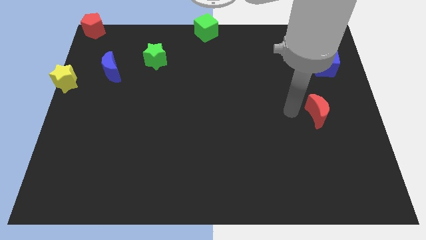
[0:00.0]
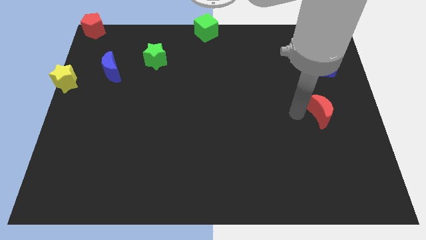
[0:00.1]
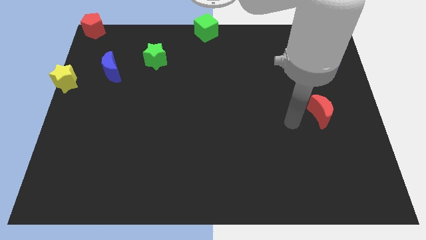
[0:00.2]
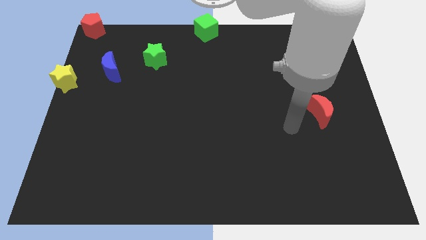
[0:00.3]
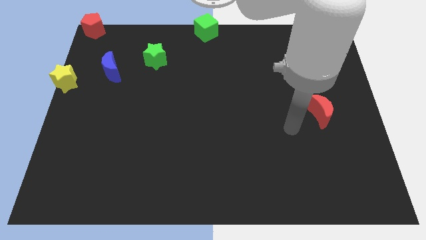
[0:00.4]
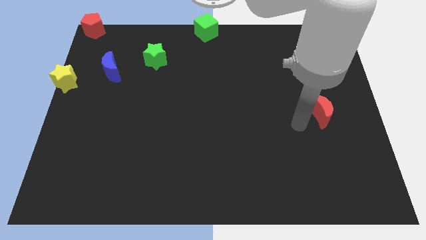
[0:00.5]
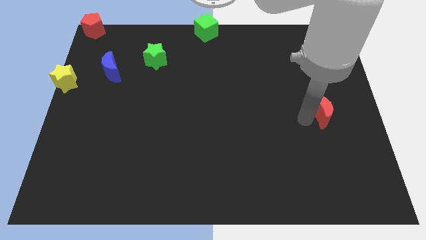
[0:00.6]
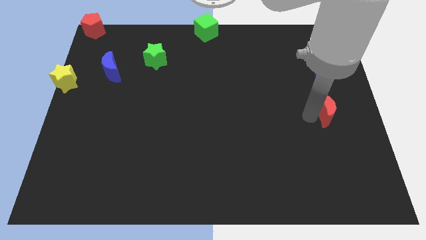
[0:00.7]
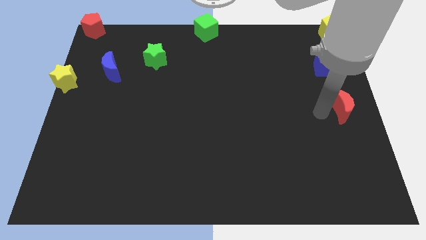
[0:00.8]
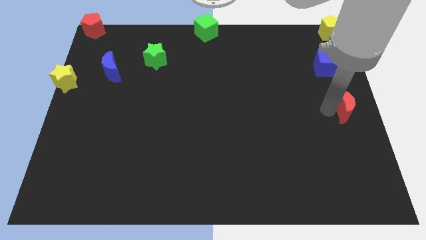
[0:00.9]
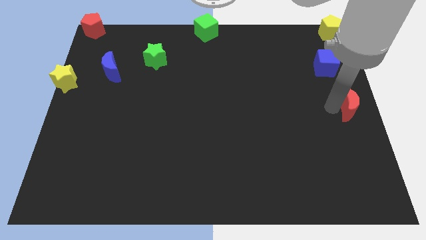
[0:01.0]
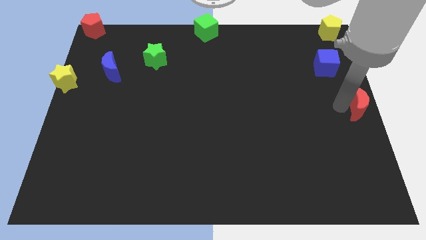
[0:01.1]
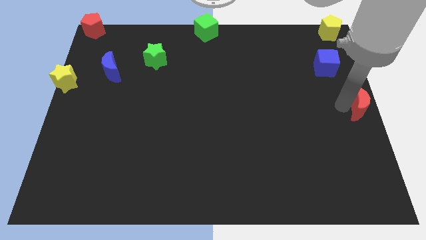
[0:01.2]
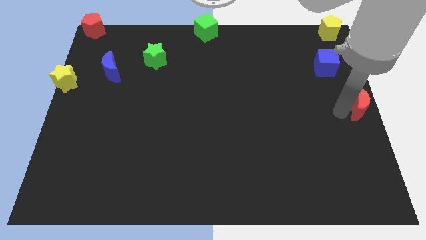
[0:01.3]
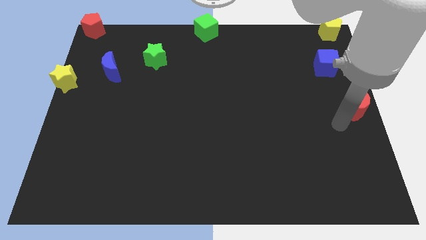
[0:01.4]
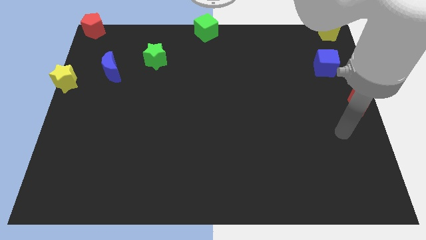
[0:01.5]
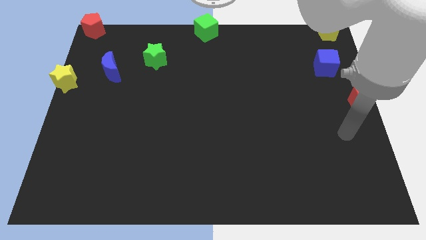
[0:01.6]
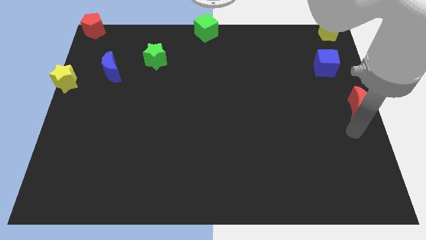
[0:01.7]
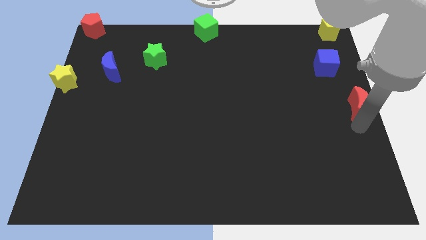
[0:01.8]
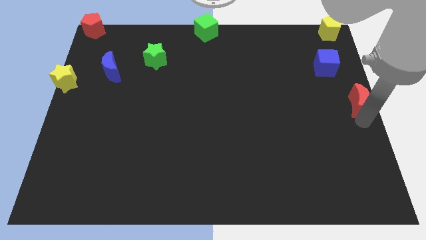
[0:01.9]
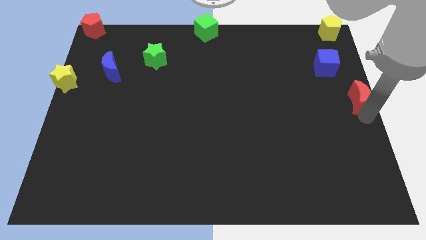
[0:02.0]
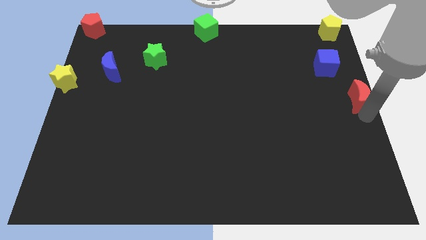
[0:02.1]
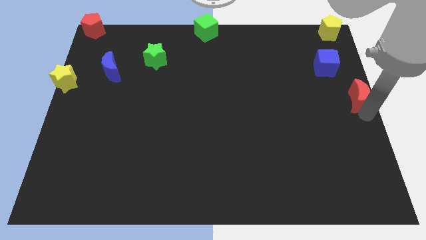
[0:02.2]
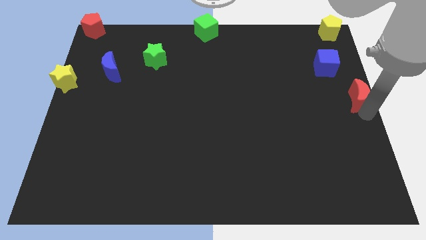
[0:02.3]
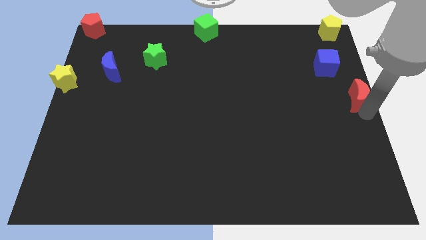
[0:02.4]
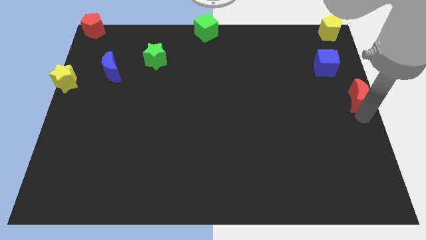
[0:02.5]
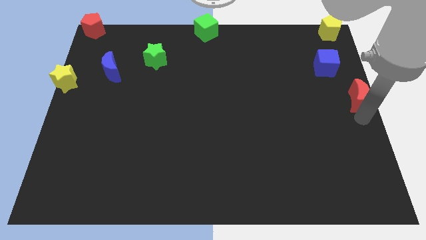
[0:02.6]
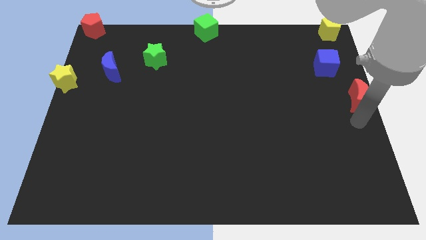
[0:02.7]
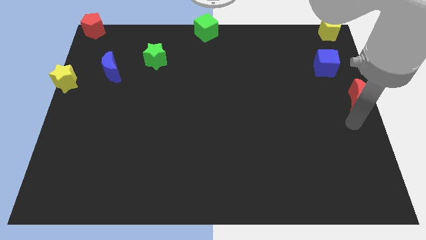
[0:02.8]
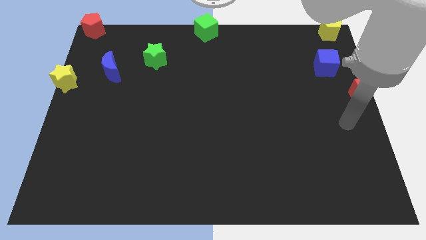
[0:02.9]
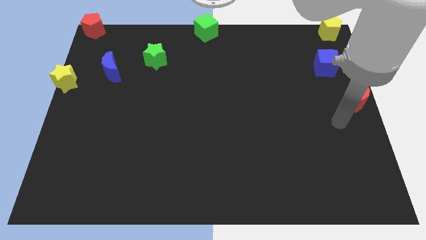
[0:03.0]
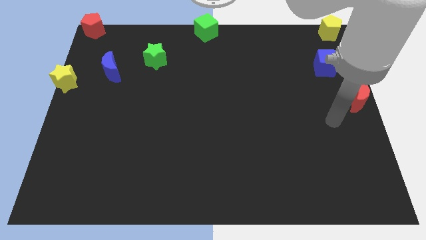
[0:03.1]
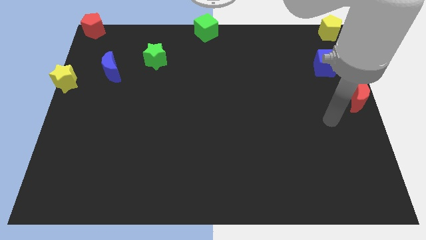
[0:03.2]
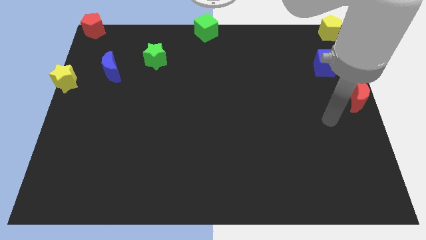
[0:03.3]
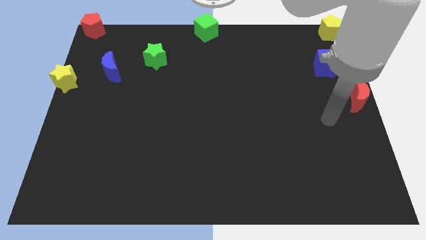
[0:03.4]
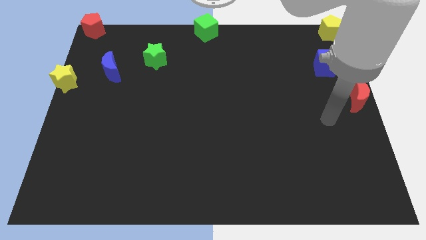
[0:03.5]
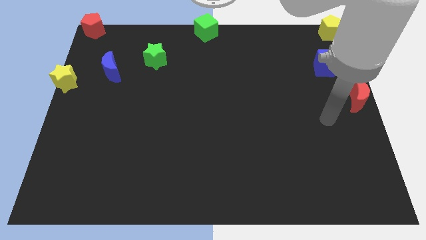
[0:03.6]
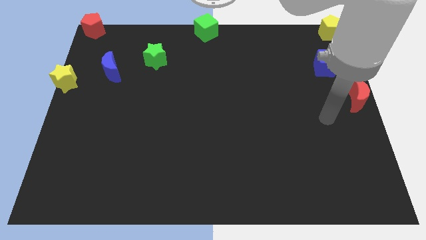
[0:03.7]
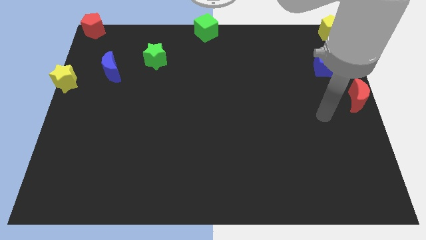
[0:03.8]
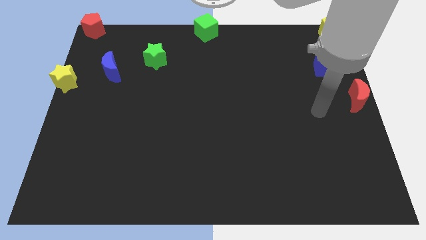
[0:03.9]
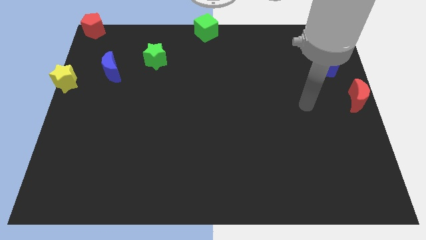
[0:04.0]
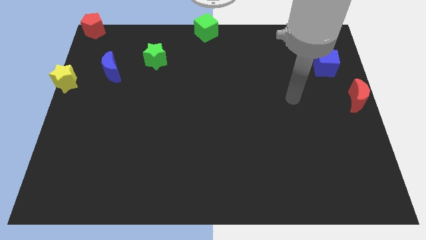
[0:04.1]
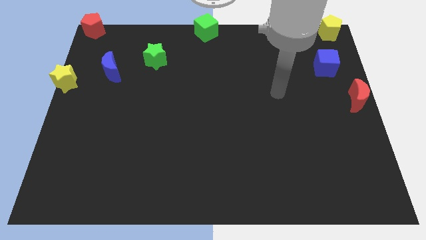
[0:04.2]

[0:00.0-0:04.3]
move the red moon to the right side of the board

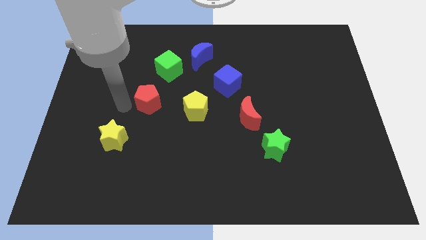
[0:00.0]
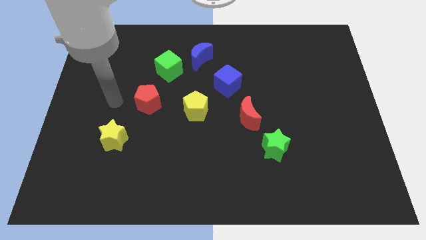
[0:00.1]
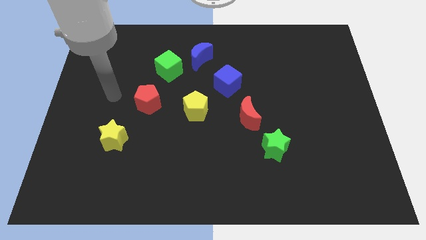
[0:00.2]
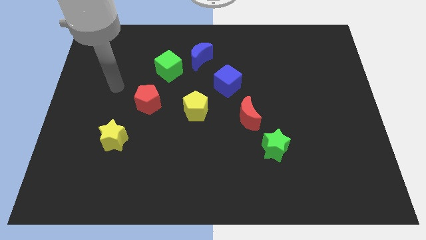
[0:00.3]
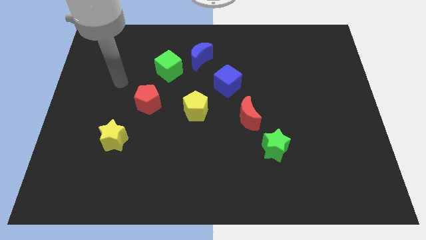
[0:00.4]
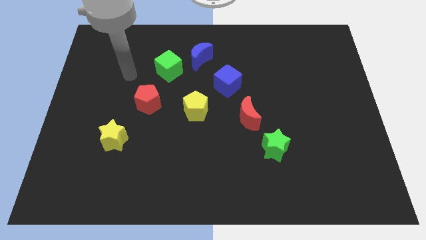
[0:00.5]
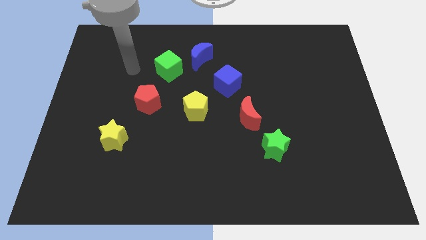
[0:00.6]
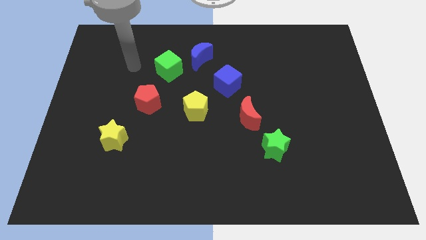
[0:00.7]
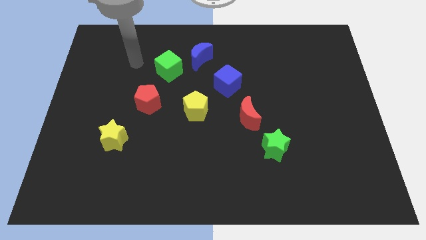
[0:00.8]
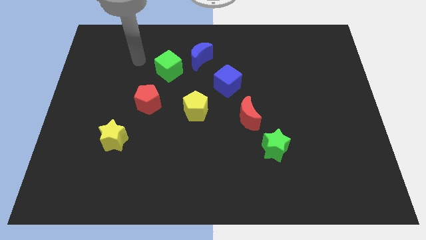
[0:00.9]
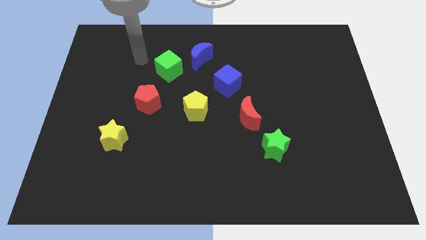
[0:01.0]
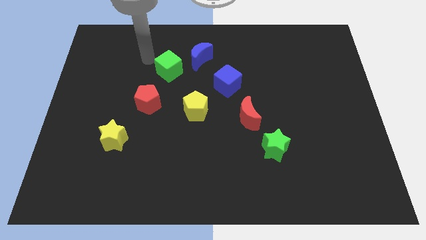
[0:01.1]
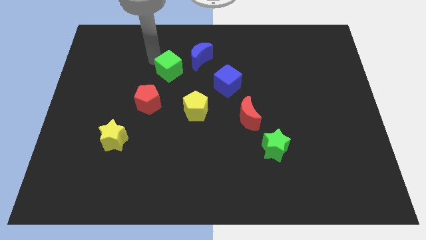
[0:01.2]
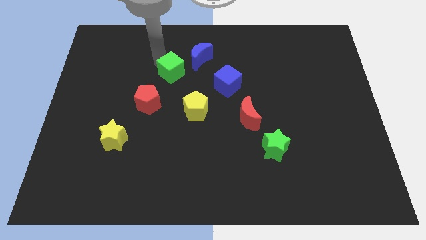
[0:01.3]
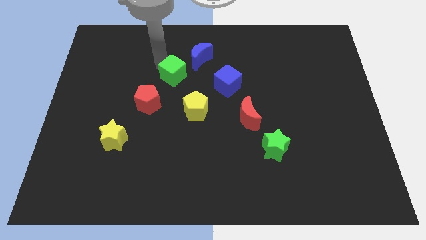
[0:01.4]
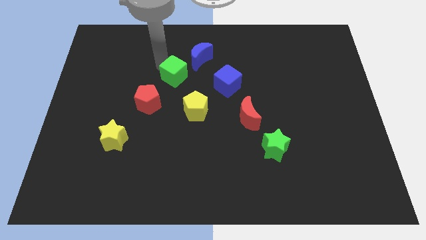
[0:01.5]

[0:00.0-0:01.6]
push the green cube slightly towards the yellow pentagon

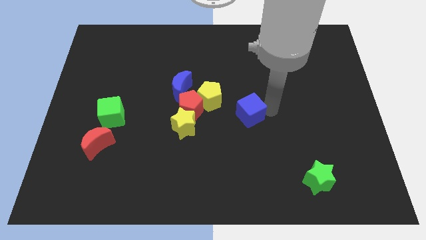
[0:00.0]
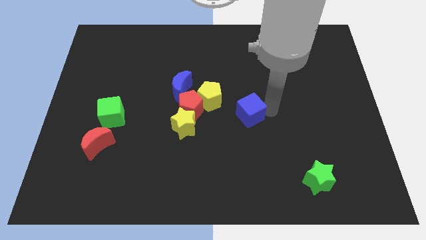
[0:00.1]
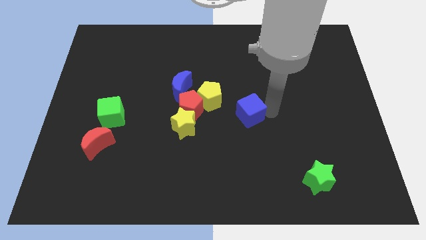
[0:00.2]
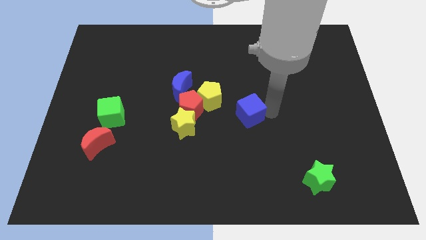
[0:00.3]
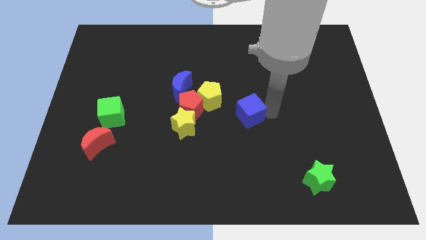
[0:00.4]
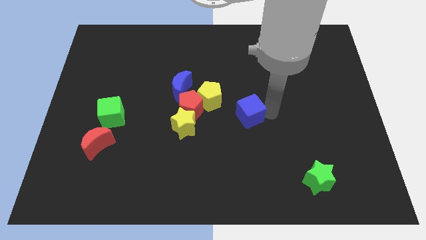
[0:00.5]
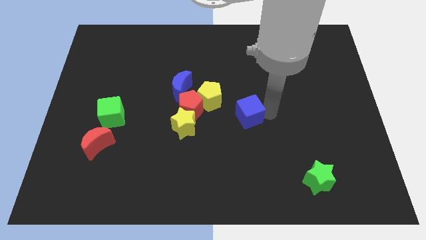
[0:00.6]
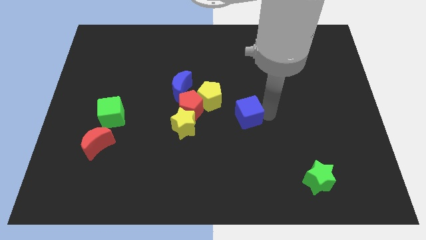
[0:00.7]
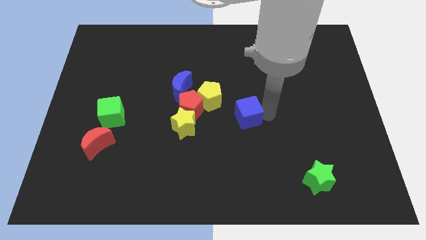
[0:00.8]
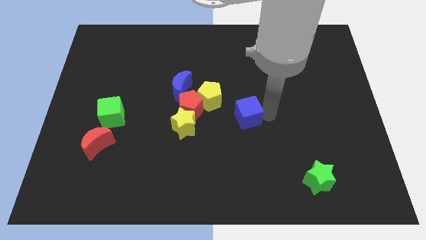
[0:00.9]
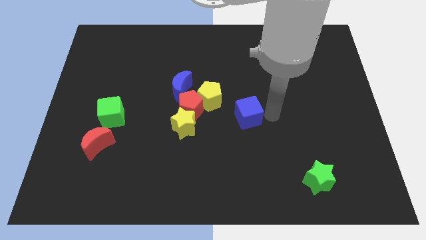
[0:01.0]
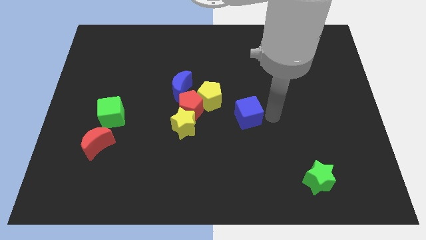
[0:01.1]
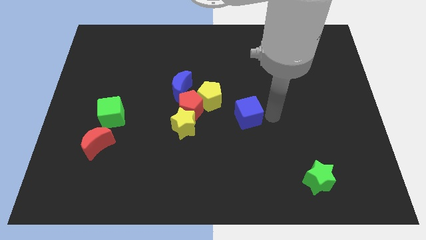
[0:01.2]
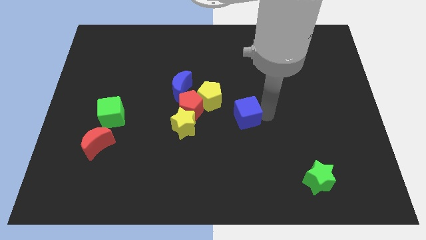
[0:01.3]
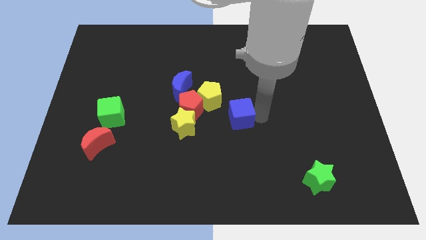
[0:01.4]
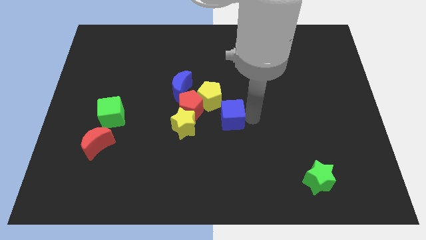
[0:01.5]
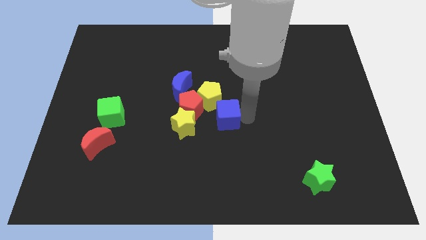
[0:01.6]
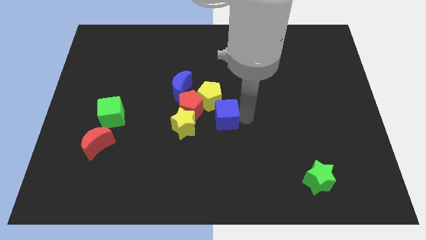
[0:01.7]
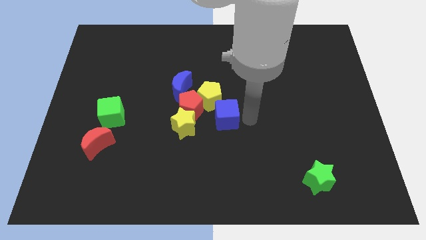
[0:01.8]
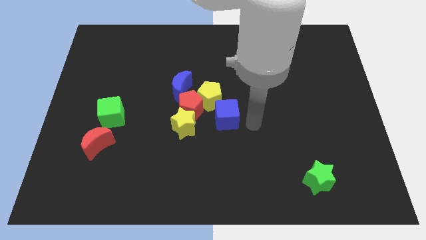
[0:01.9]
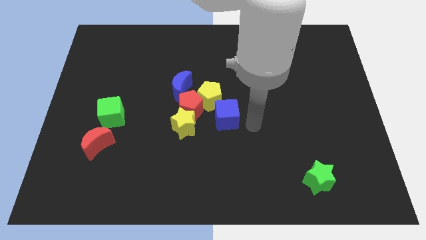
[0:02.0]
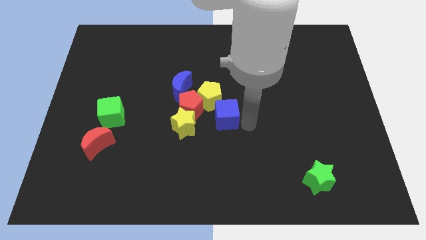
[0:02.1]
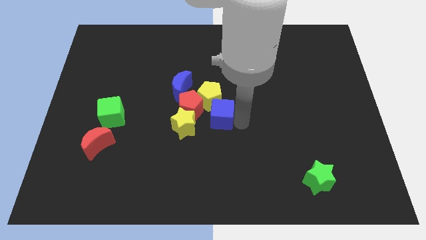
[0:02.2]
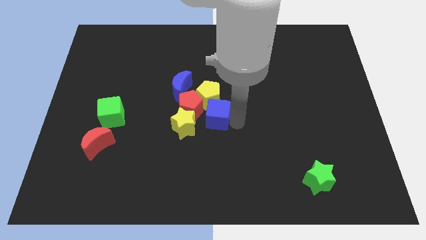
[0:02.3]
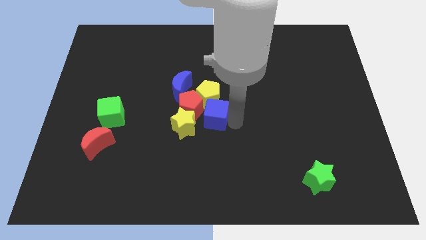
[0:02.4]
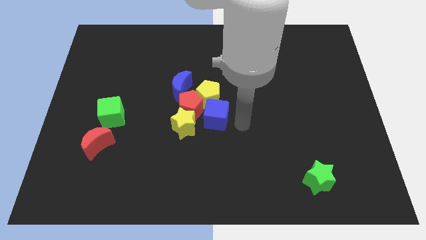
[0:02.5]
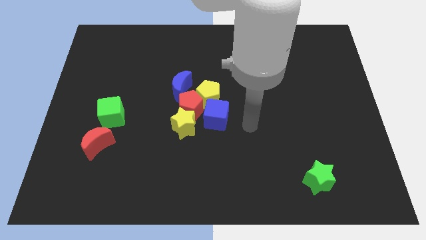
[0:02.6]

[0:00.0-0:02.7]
place the blue cube right to the red pentagon

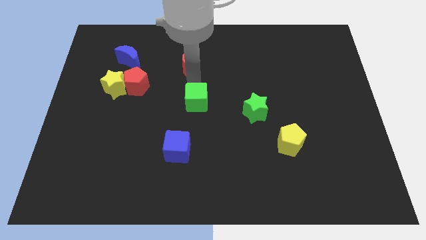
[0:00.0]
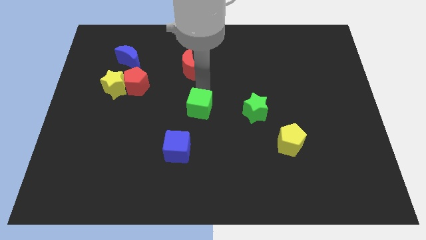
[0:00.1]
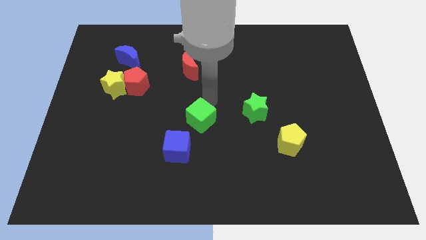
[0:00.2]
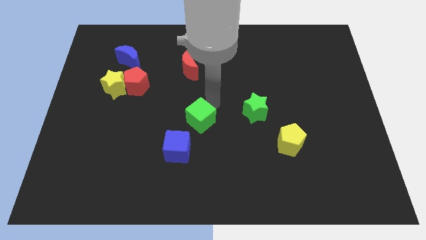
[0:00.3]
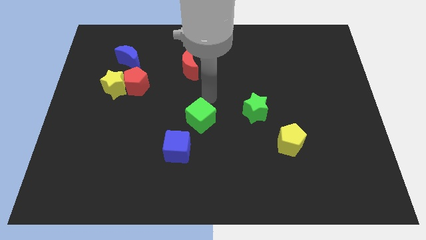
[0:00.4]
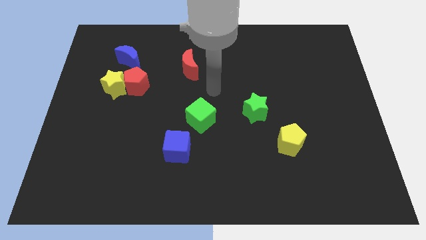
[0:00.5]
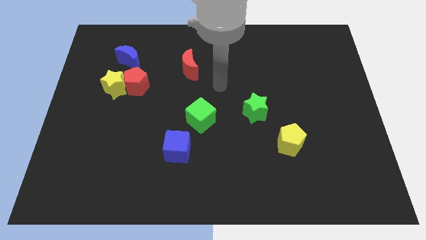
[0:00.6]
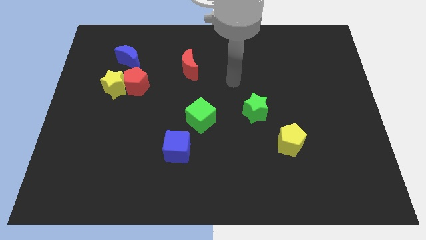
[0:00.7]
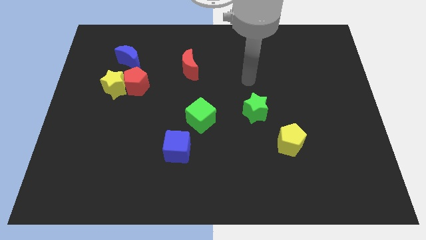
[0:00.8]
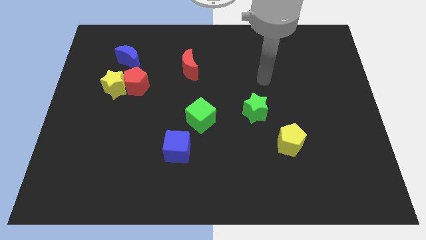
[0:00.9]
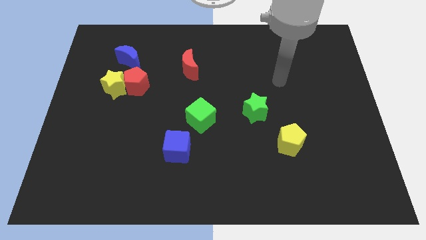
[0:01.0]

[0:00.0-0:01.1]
push green cube towards blue cube
